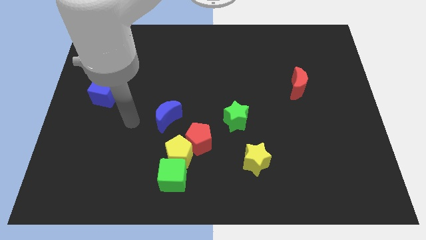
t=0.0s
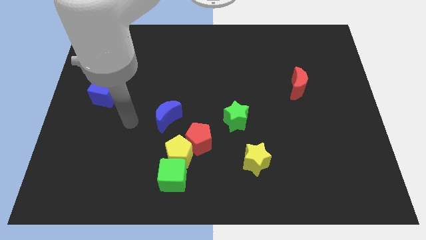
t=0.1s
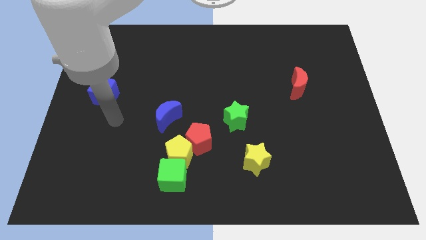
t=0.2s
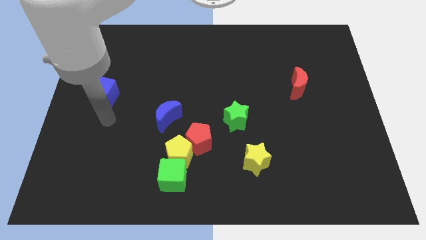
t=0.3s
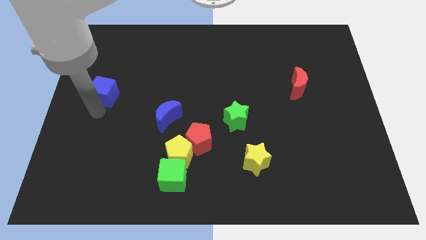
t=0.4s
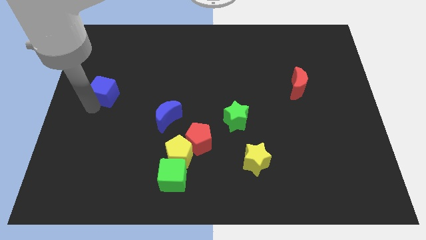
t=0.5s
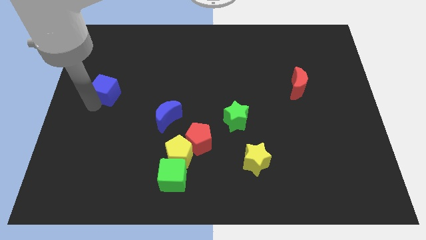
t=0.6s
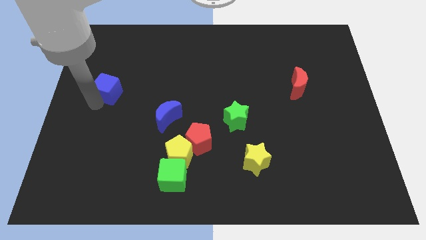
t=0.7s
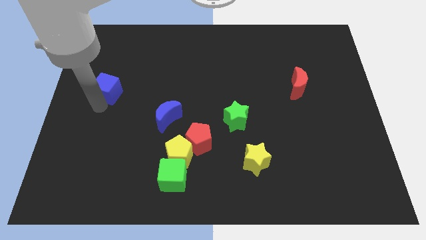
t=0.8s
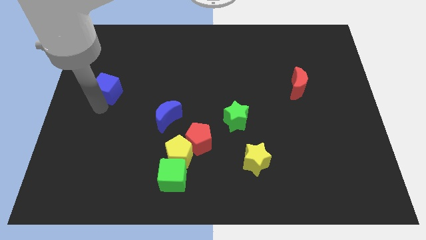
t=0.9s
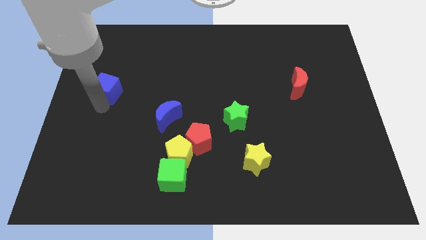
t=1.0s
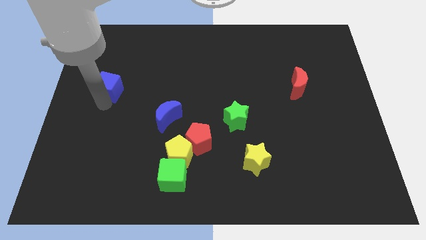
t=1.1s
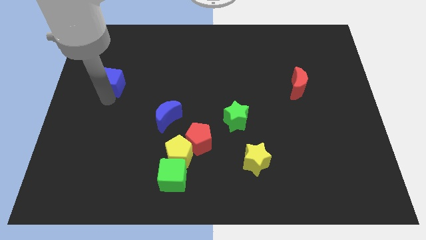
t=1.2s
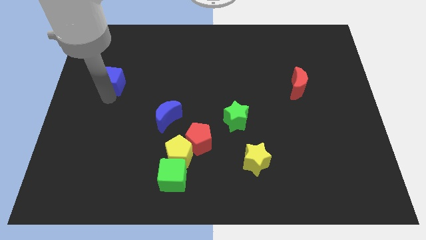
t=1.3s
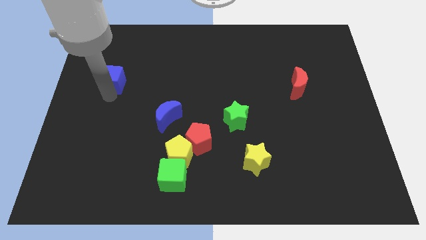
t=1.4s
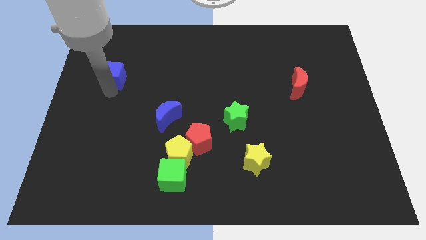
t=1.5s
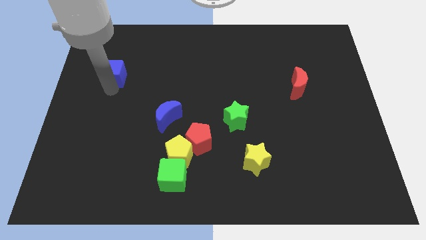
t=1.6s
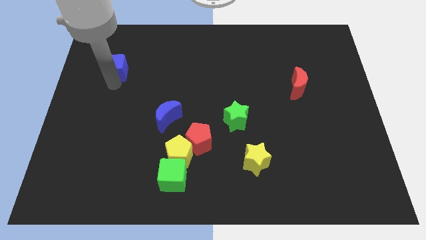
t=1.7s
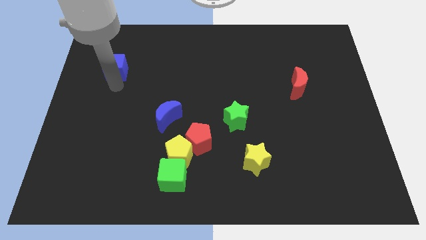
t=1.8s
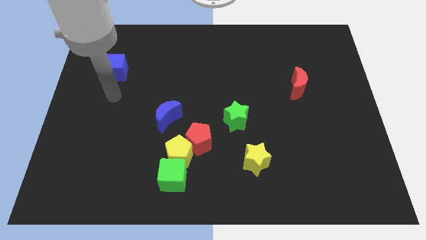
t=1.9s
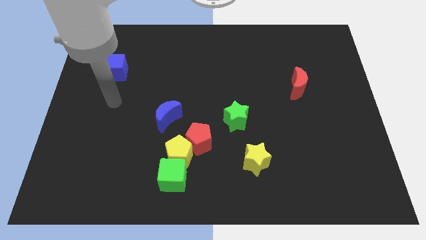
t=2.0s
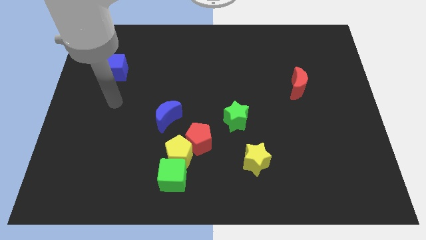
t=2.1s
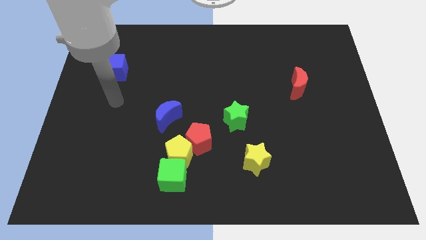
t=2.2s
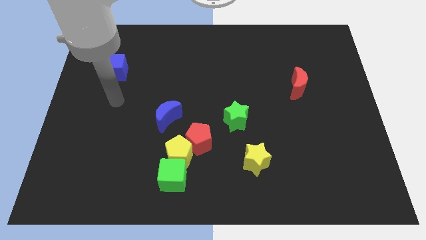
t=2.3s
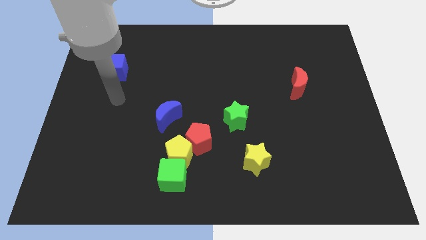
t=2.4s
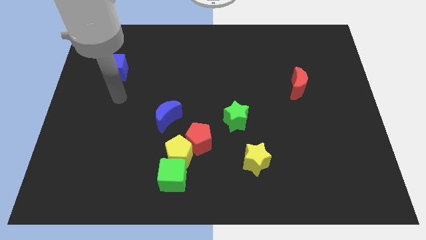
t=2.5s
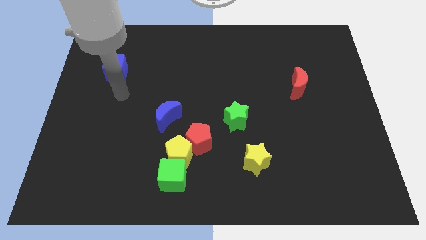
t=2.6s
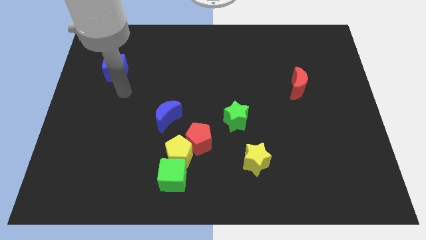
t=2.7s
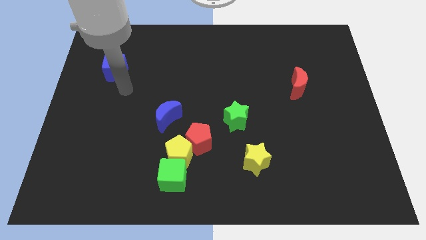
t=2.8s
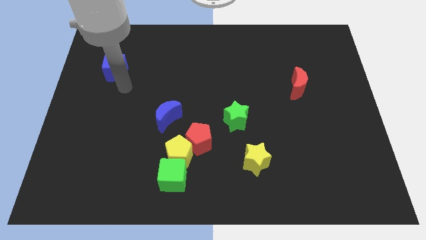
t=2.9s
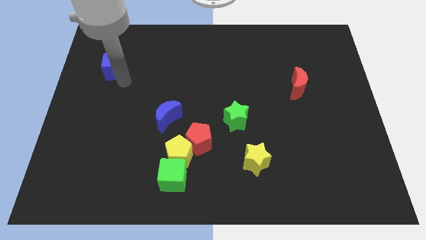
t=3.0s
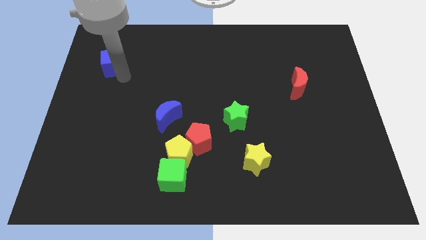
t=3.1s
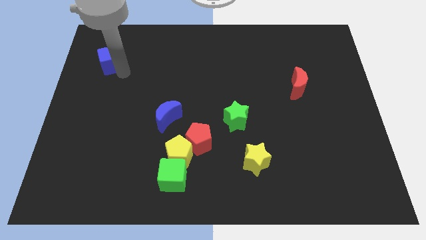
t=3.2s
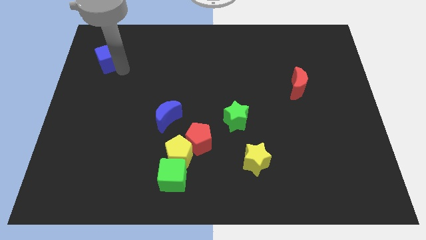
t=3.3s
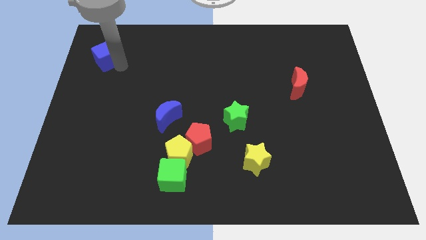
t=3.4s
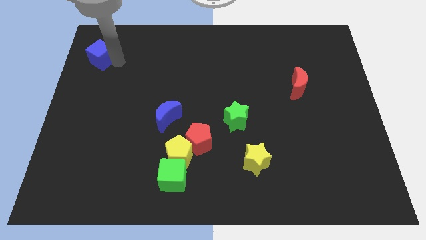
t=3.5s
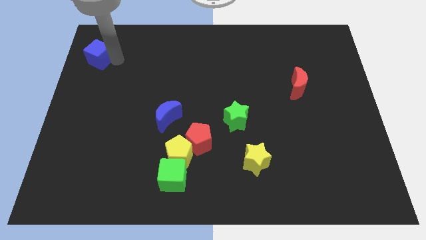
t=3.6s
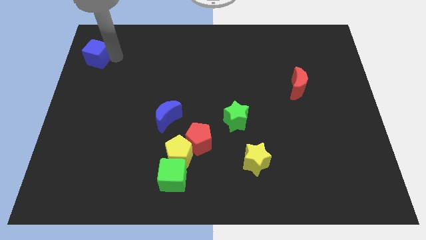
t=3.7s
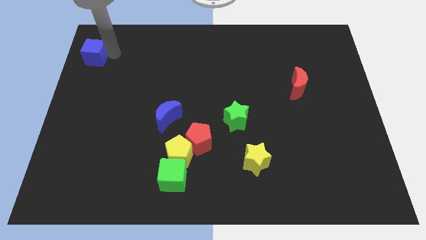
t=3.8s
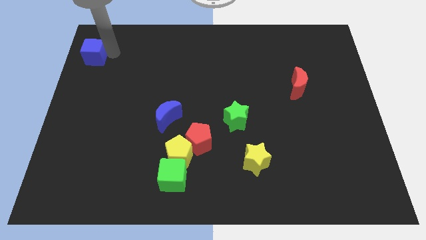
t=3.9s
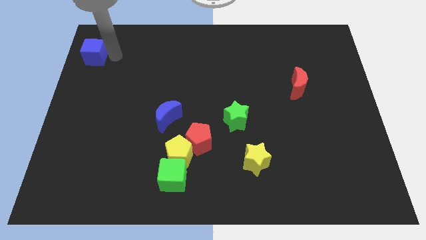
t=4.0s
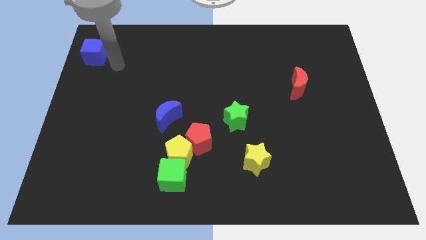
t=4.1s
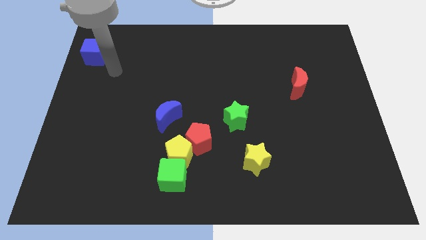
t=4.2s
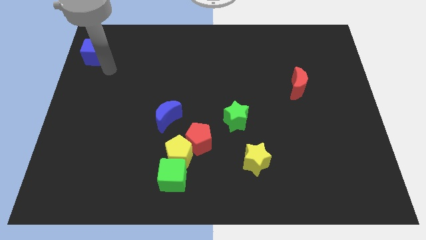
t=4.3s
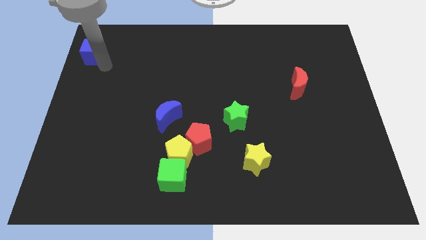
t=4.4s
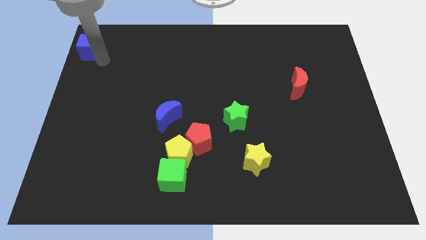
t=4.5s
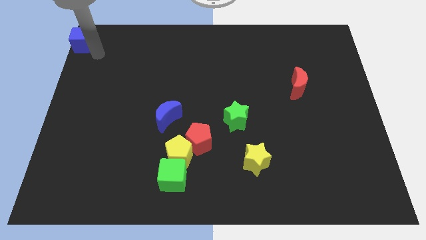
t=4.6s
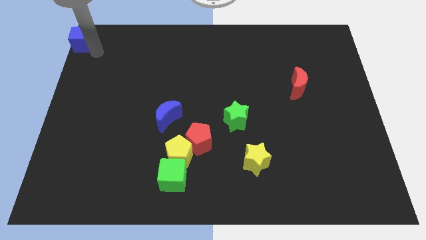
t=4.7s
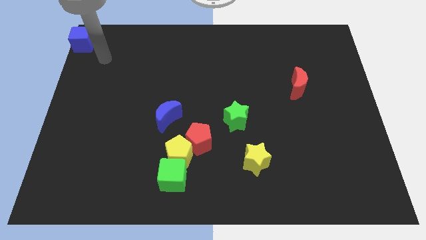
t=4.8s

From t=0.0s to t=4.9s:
push the blue cube towards the top left side of the board

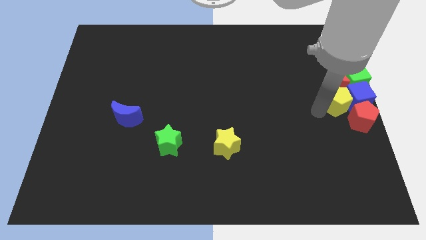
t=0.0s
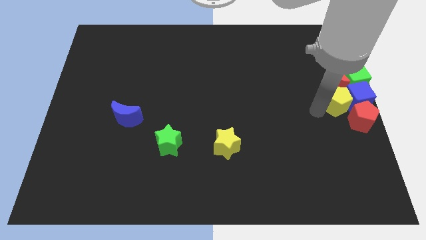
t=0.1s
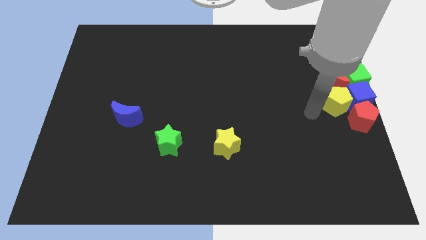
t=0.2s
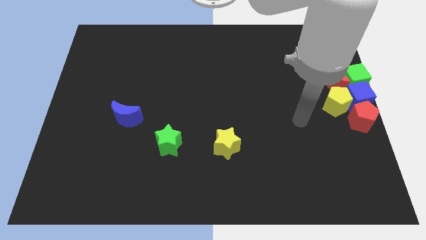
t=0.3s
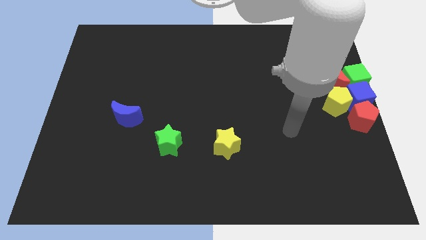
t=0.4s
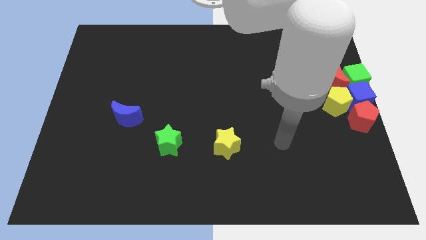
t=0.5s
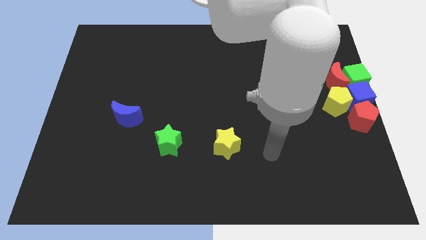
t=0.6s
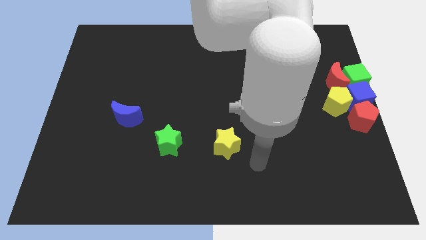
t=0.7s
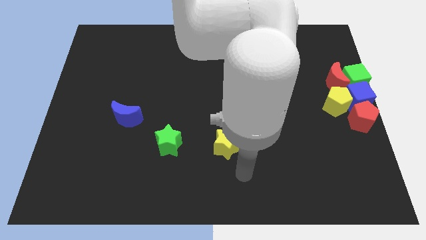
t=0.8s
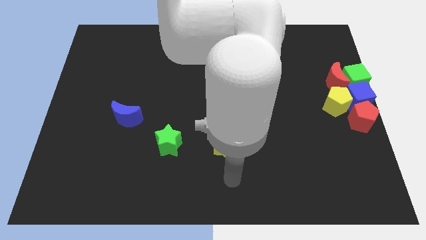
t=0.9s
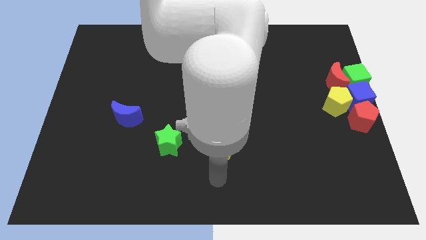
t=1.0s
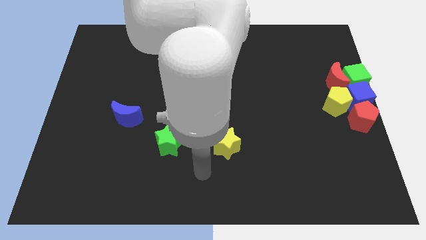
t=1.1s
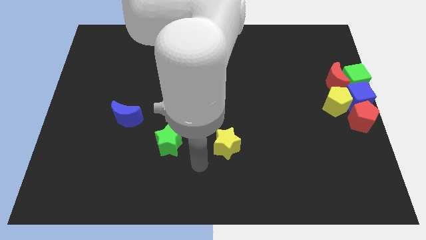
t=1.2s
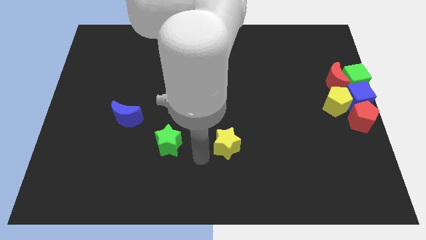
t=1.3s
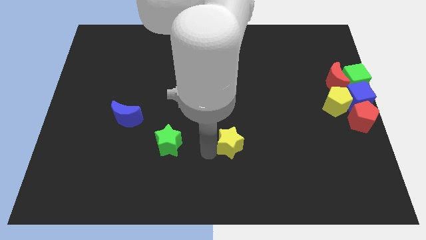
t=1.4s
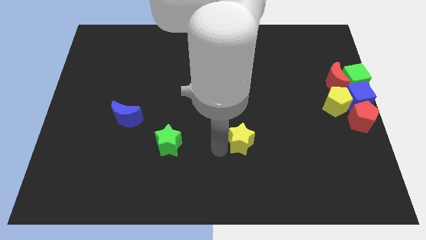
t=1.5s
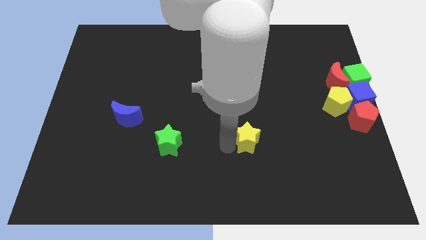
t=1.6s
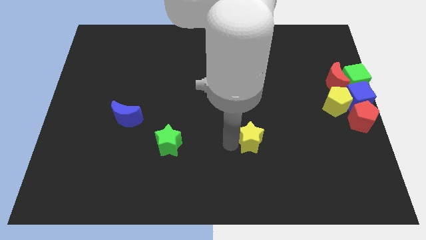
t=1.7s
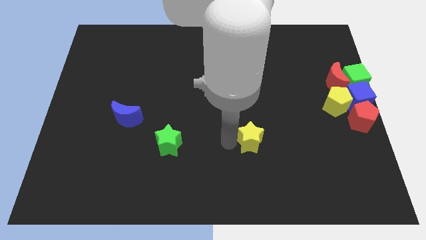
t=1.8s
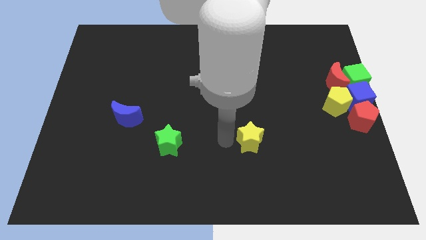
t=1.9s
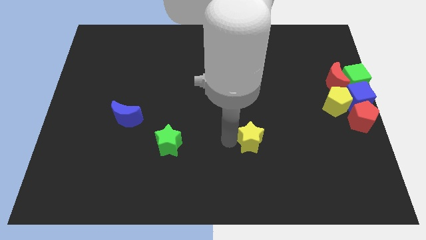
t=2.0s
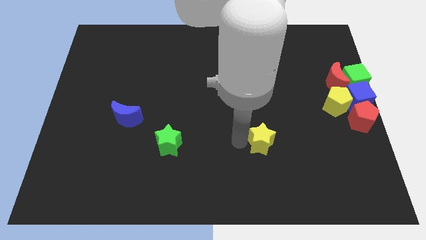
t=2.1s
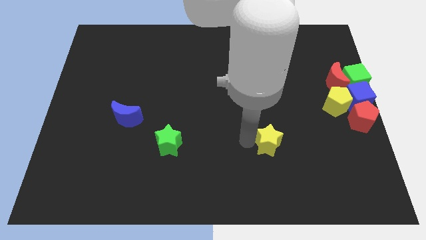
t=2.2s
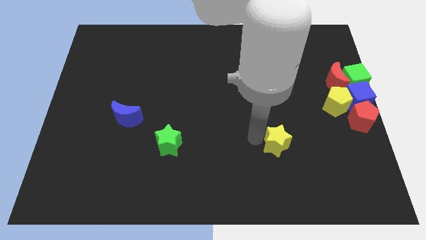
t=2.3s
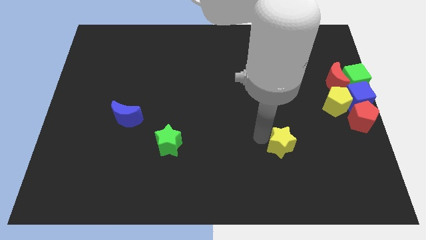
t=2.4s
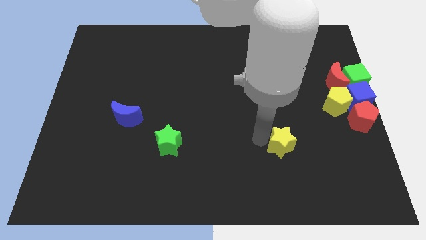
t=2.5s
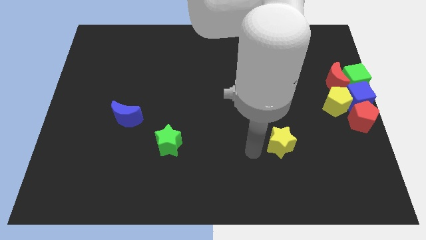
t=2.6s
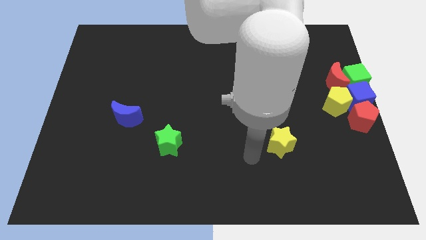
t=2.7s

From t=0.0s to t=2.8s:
place the yellow star diagonally towards the bottom left side of the yellow pentagon

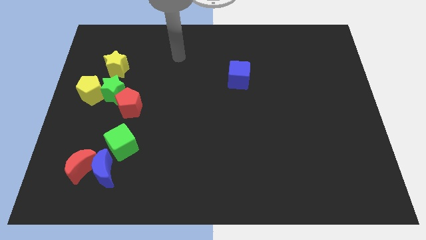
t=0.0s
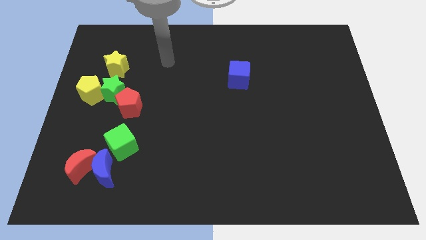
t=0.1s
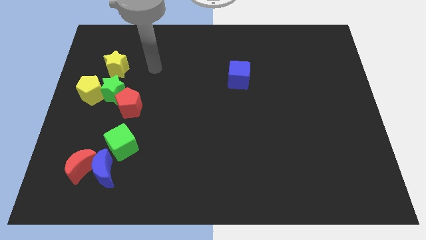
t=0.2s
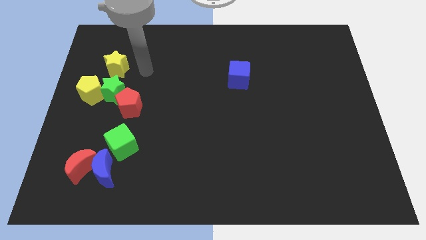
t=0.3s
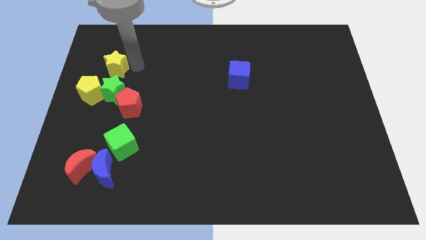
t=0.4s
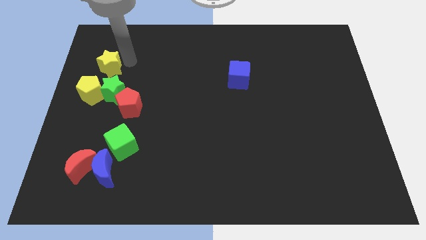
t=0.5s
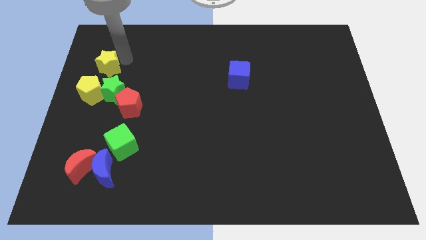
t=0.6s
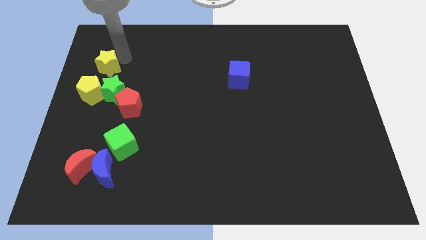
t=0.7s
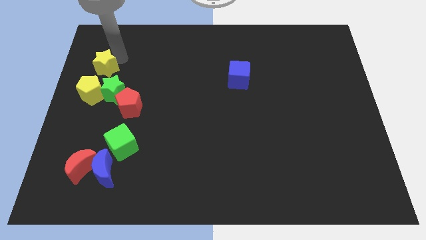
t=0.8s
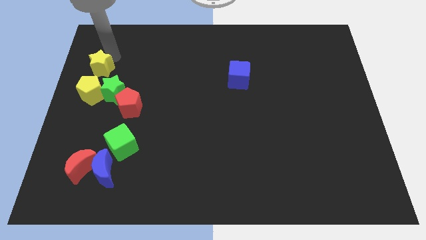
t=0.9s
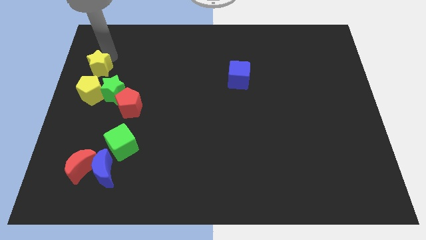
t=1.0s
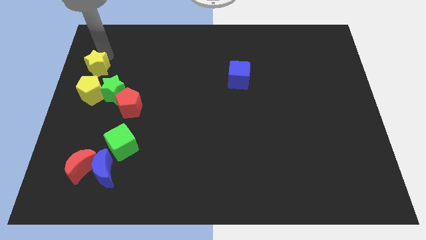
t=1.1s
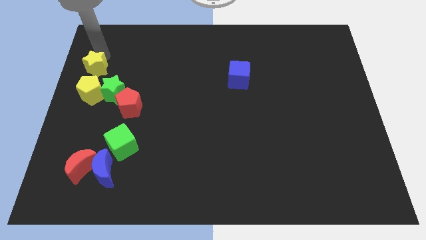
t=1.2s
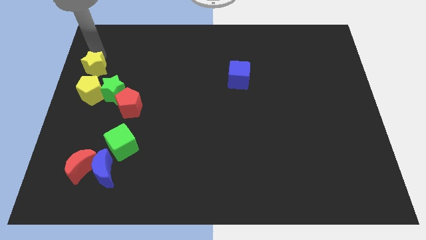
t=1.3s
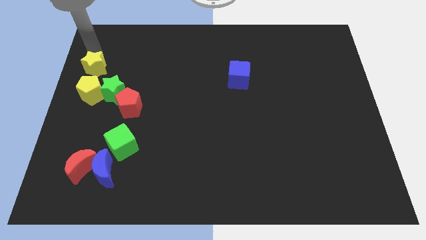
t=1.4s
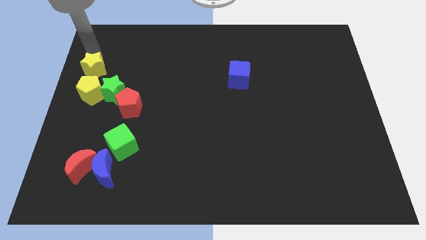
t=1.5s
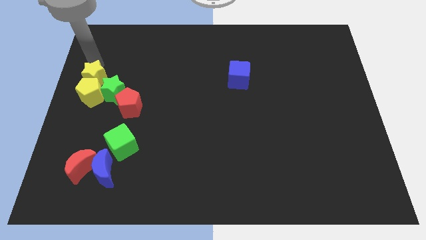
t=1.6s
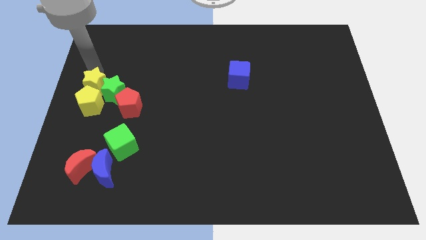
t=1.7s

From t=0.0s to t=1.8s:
push the yellow star close to the yellow pentagon
